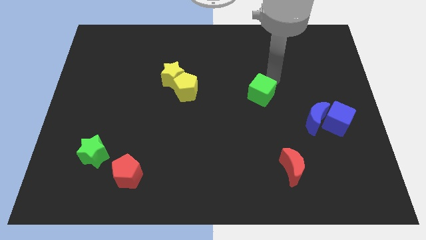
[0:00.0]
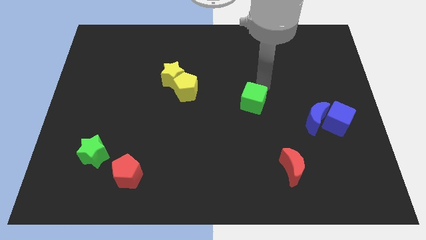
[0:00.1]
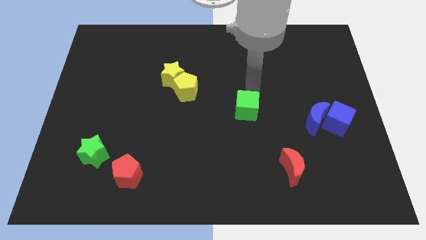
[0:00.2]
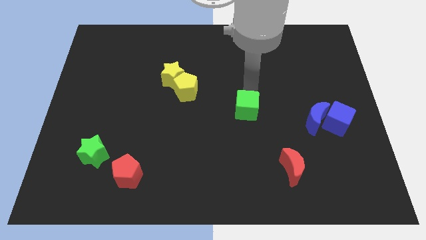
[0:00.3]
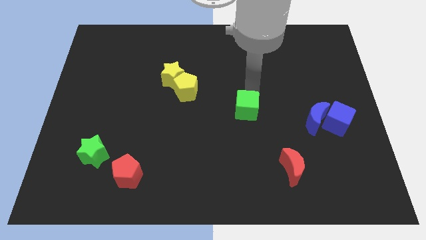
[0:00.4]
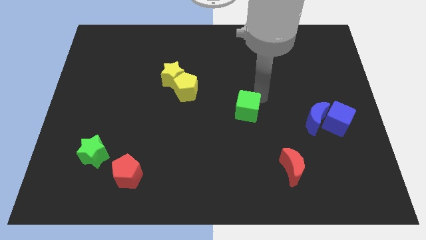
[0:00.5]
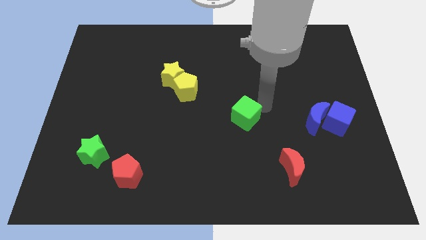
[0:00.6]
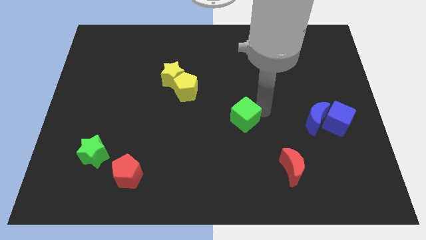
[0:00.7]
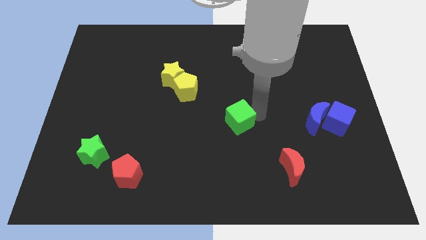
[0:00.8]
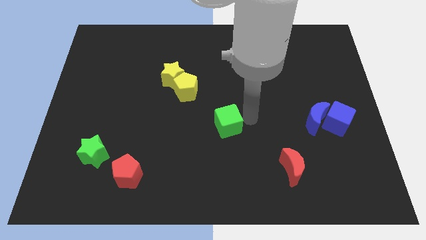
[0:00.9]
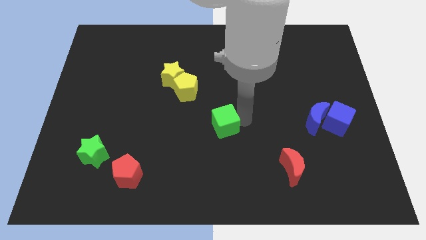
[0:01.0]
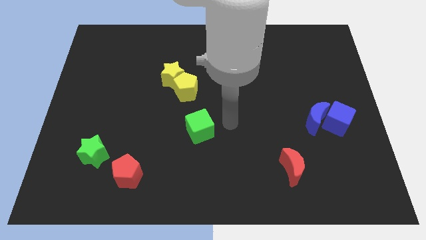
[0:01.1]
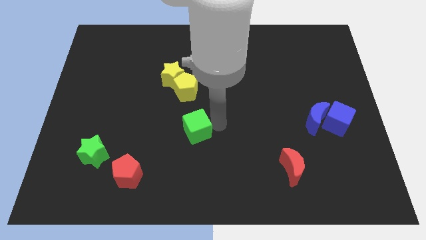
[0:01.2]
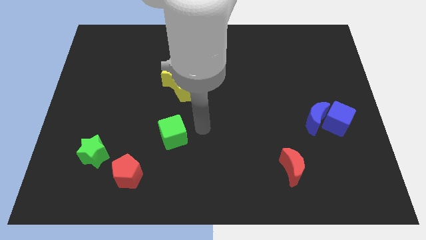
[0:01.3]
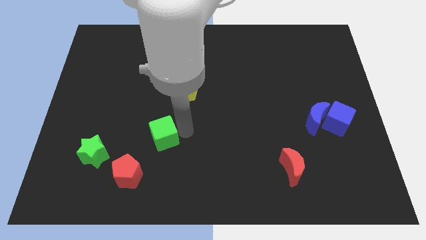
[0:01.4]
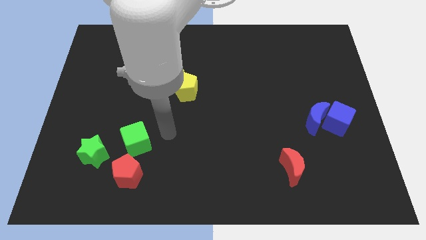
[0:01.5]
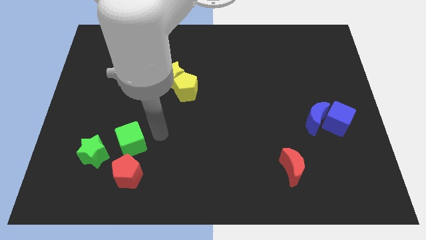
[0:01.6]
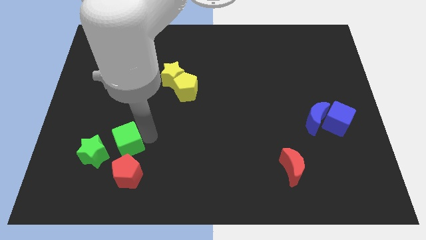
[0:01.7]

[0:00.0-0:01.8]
push the green cube right to the green star

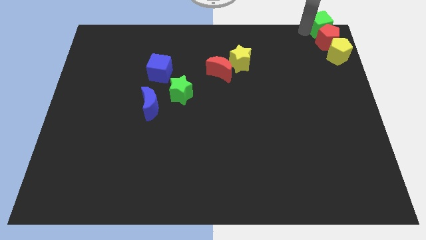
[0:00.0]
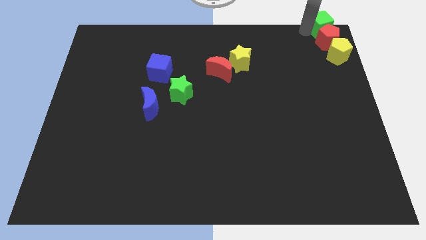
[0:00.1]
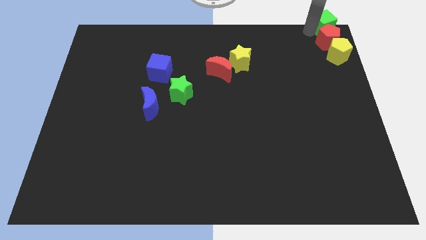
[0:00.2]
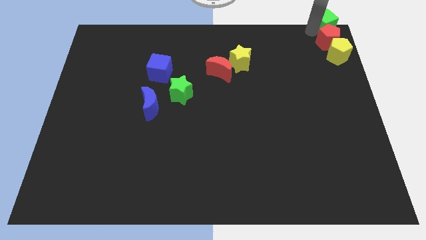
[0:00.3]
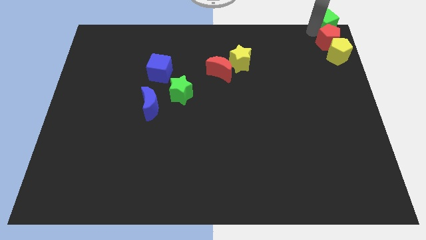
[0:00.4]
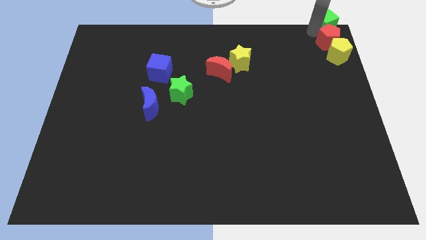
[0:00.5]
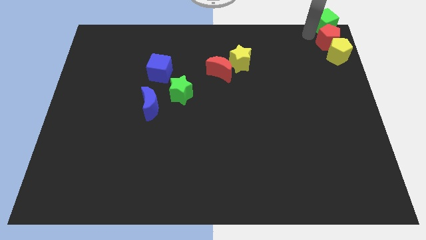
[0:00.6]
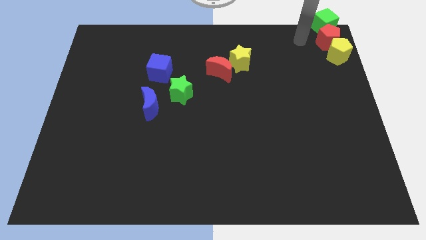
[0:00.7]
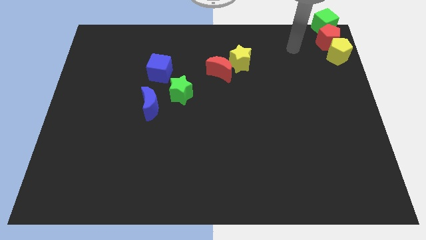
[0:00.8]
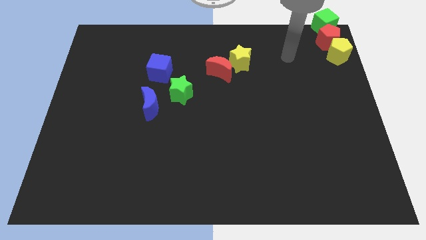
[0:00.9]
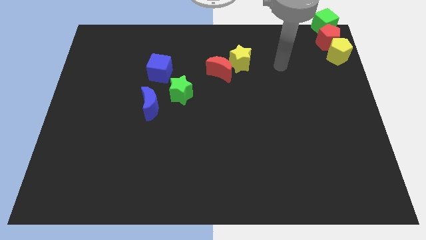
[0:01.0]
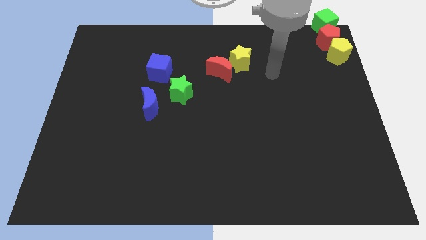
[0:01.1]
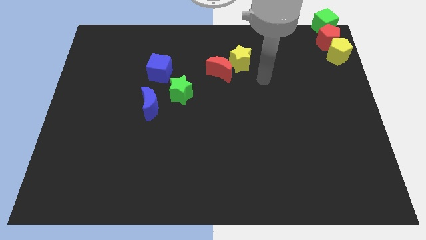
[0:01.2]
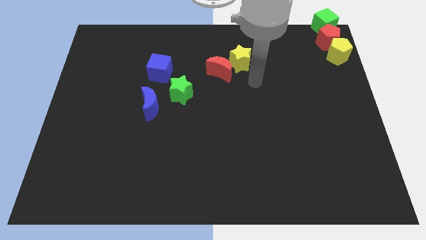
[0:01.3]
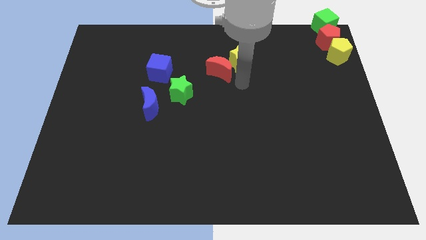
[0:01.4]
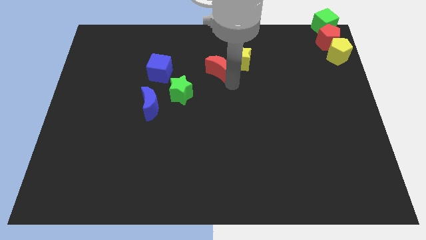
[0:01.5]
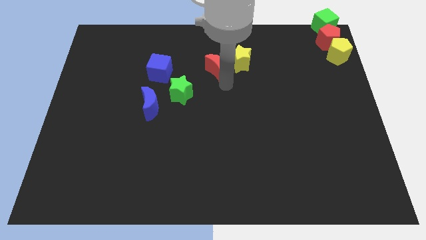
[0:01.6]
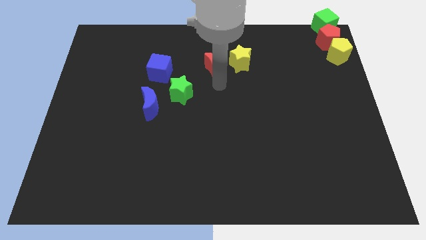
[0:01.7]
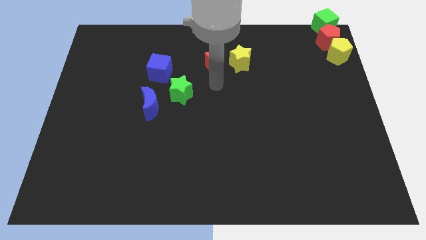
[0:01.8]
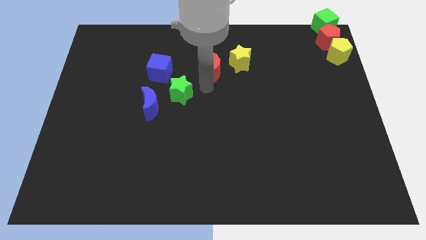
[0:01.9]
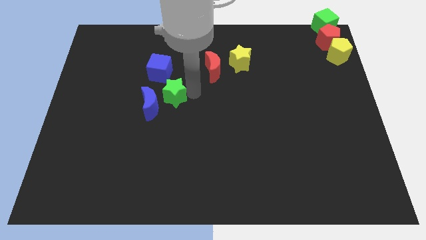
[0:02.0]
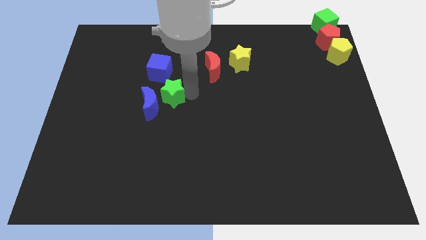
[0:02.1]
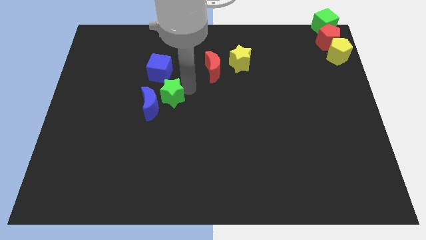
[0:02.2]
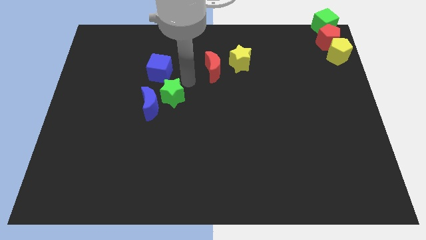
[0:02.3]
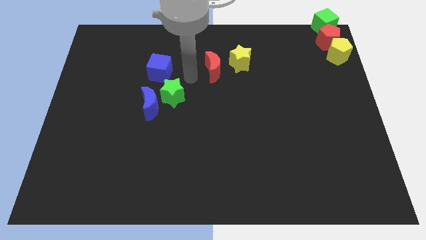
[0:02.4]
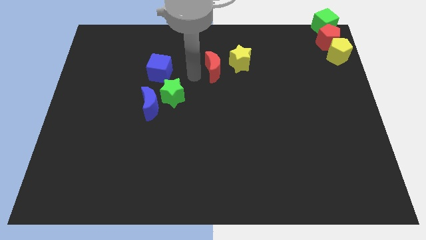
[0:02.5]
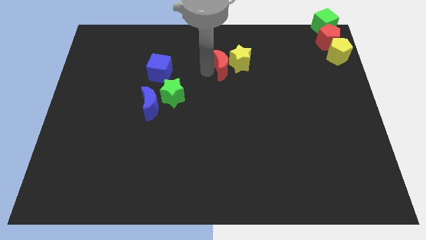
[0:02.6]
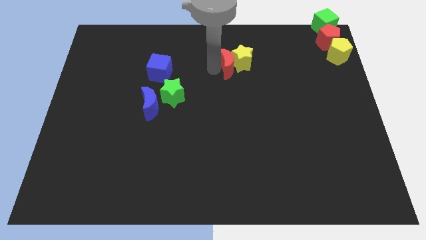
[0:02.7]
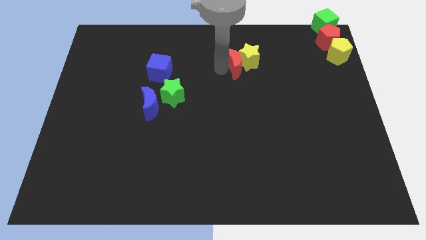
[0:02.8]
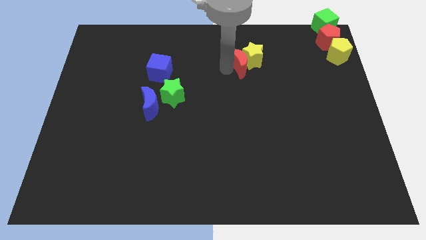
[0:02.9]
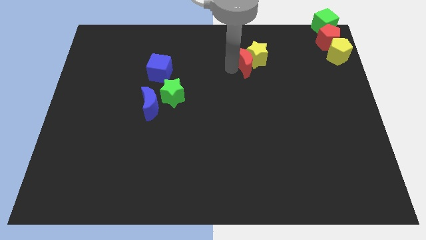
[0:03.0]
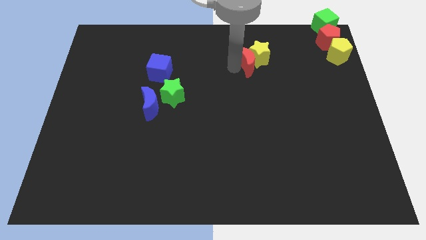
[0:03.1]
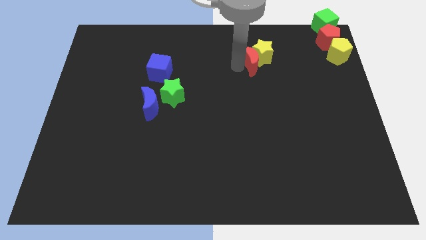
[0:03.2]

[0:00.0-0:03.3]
push red crescent slightly towards top right

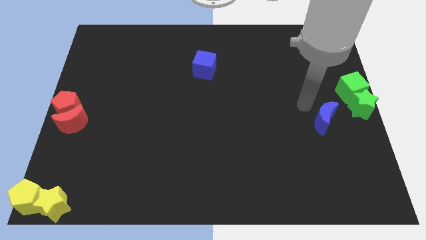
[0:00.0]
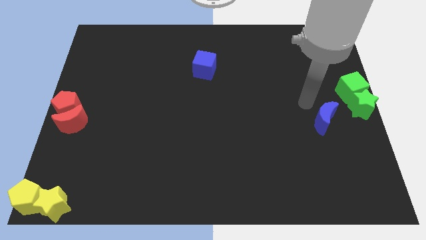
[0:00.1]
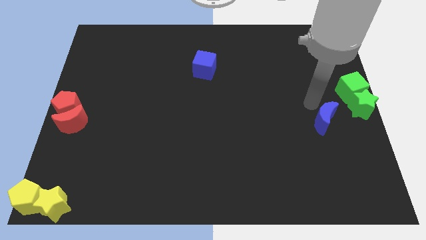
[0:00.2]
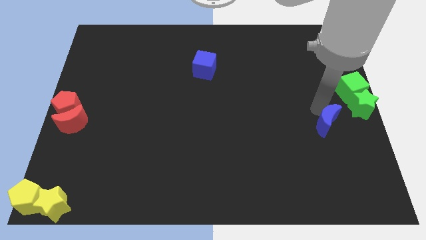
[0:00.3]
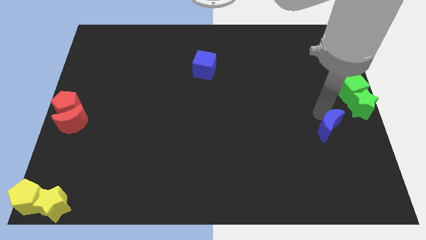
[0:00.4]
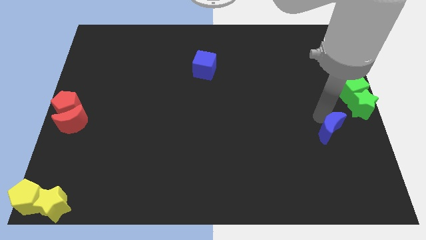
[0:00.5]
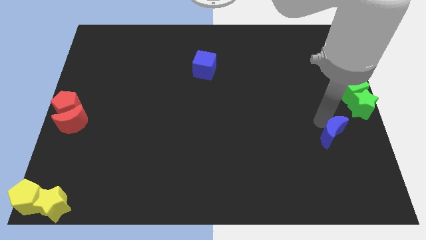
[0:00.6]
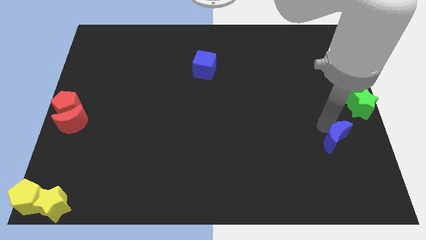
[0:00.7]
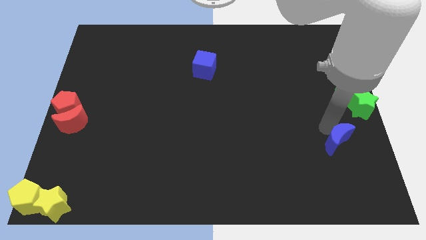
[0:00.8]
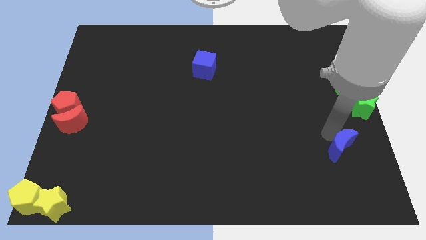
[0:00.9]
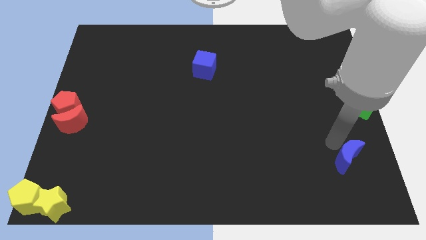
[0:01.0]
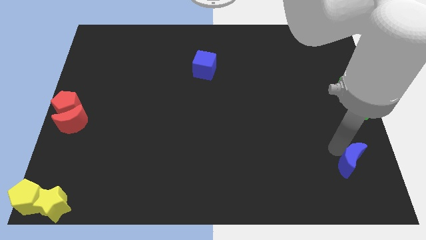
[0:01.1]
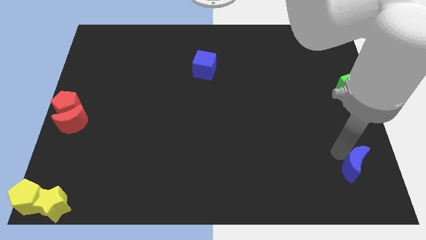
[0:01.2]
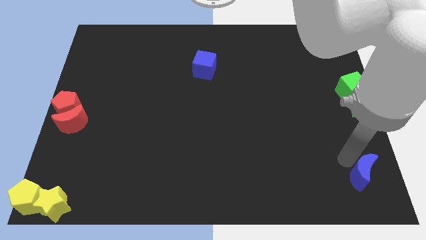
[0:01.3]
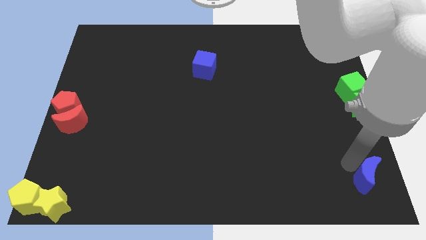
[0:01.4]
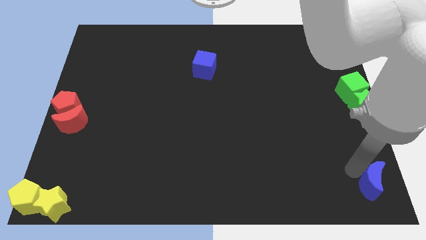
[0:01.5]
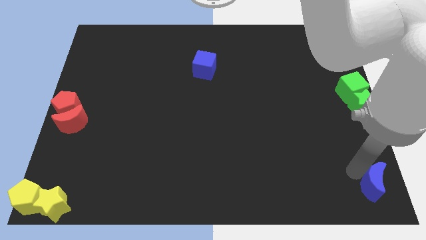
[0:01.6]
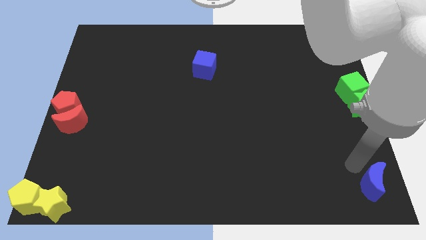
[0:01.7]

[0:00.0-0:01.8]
move the blue crescent to the bottom right of the board

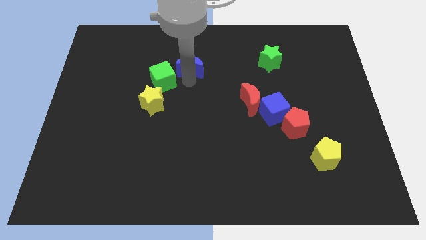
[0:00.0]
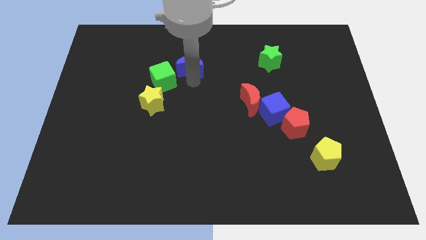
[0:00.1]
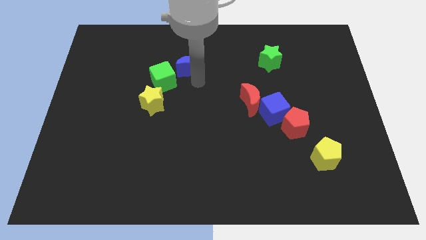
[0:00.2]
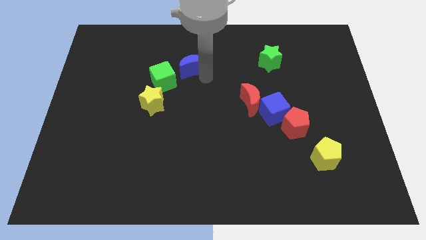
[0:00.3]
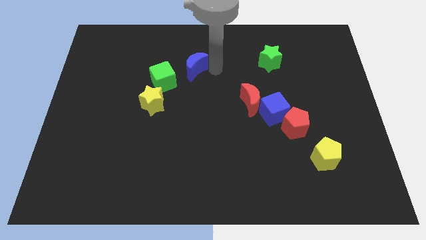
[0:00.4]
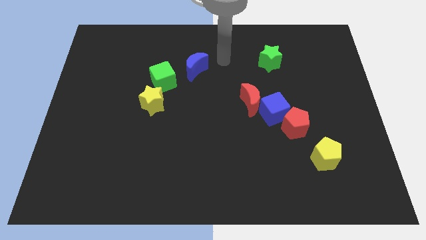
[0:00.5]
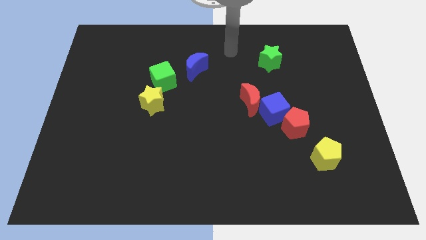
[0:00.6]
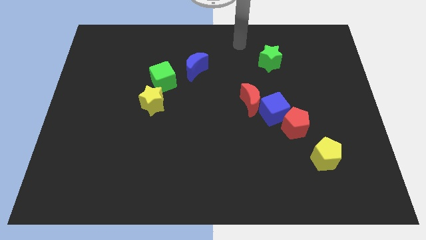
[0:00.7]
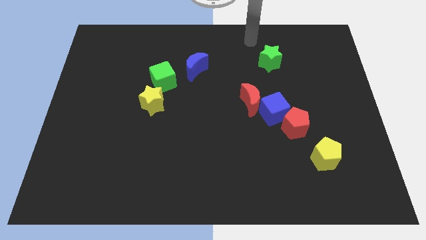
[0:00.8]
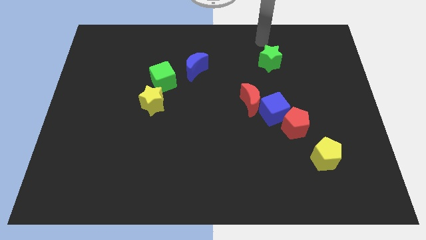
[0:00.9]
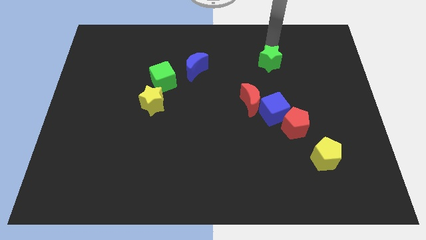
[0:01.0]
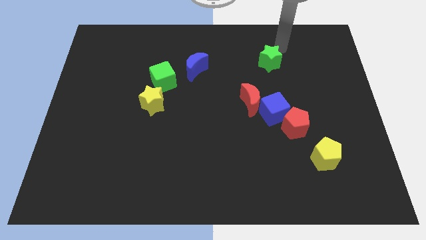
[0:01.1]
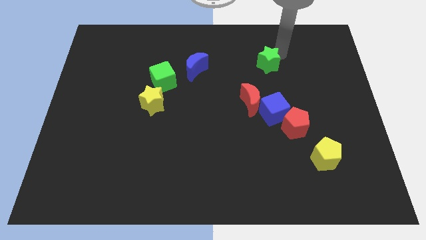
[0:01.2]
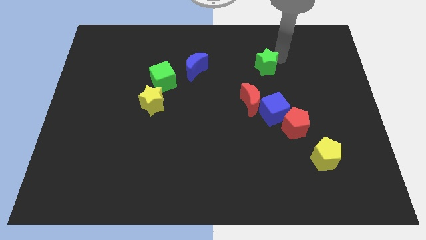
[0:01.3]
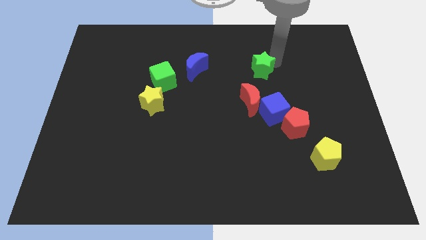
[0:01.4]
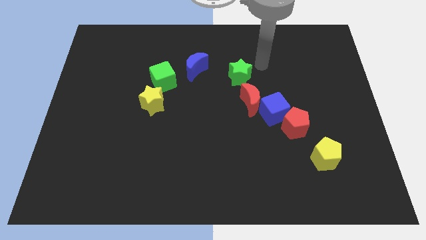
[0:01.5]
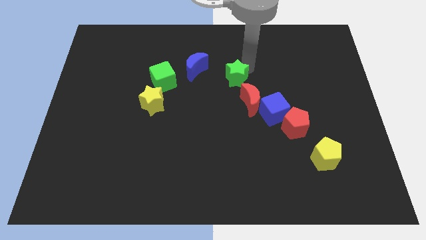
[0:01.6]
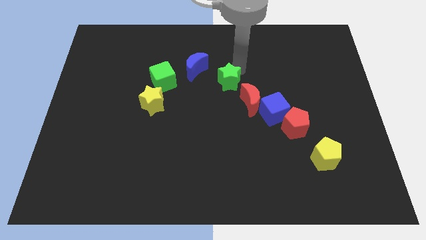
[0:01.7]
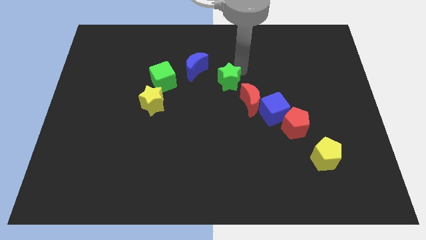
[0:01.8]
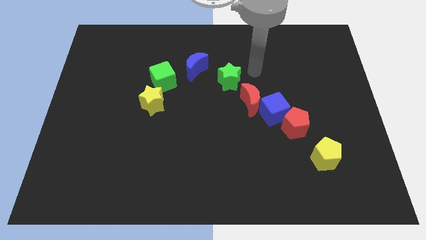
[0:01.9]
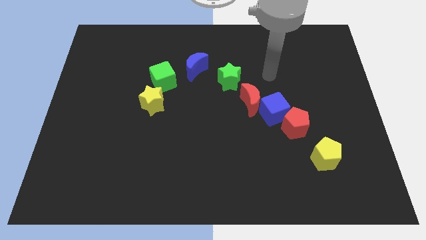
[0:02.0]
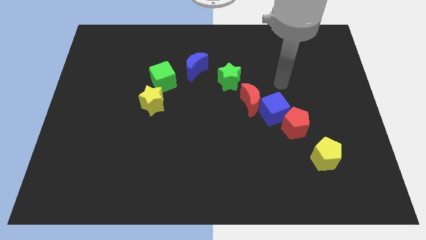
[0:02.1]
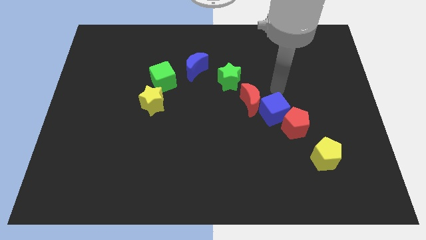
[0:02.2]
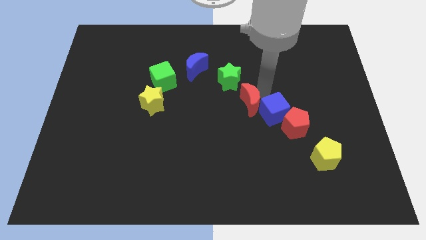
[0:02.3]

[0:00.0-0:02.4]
place the green star in between the red moon and blue crescent
